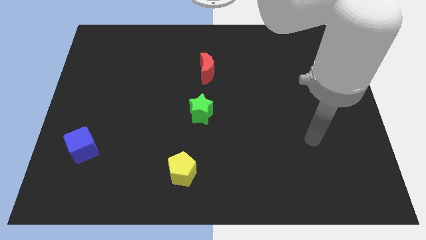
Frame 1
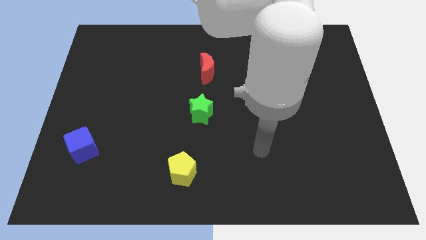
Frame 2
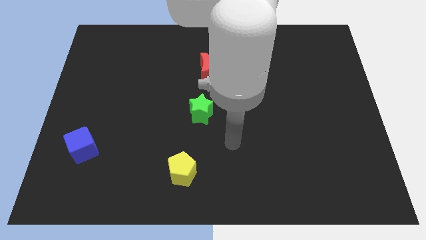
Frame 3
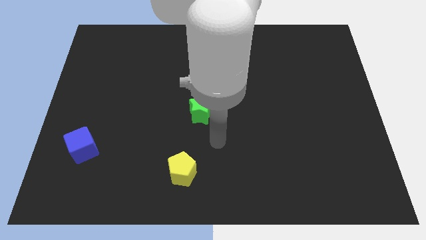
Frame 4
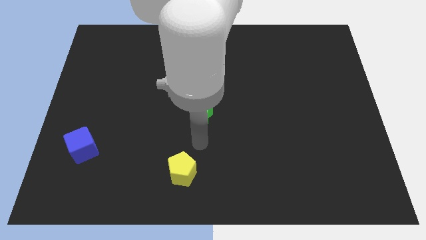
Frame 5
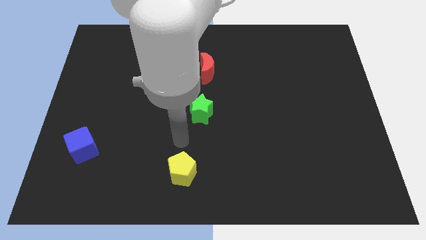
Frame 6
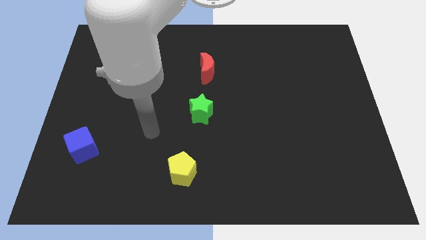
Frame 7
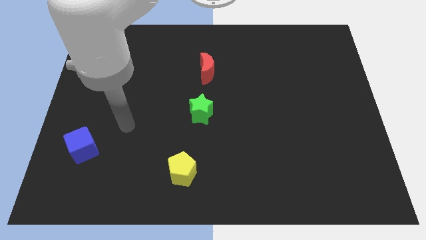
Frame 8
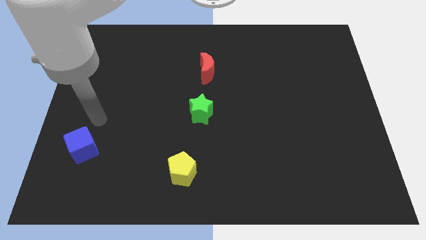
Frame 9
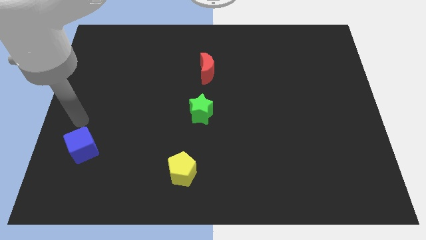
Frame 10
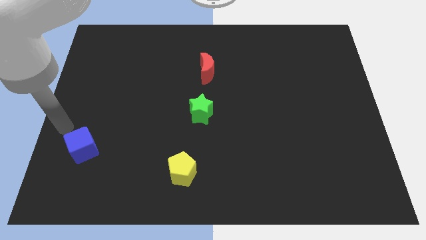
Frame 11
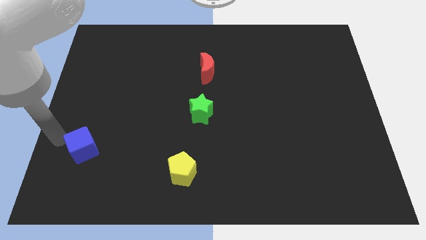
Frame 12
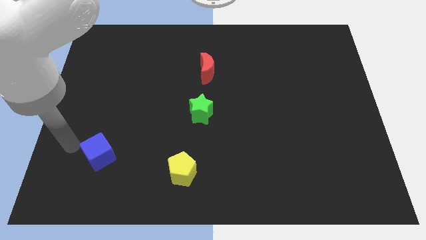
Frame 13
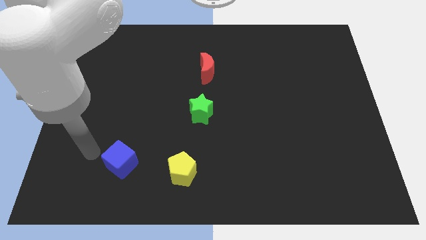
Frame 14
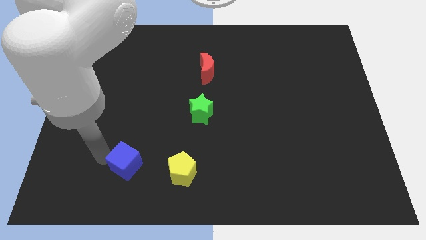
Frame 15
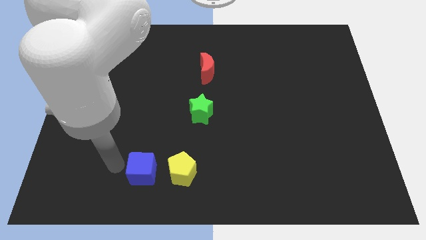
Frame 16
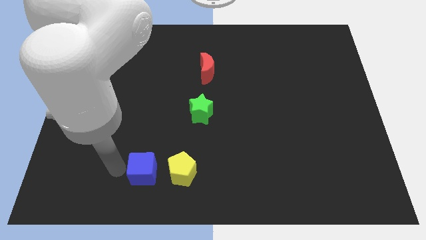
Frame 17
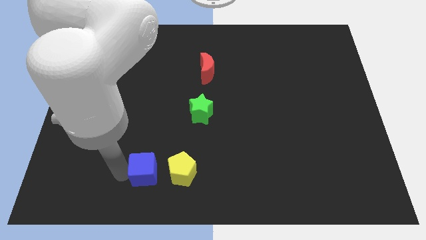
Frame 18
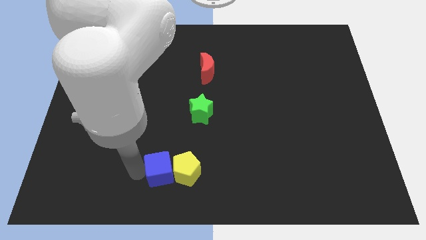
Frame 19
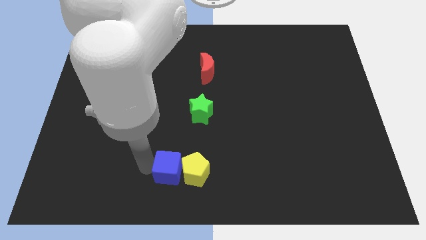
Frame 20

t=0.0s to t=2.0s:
slide the blue cube towards the pentagon

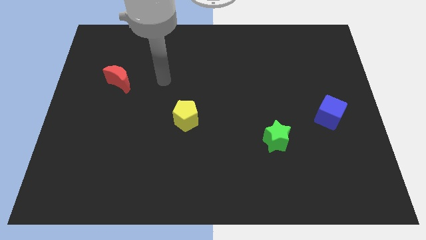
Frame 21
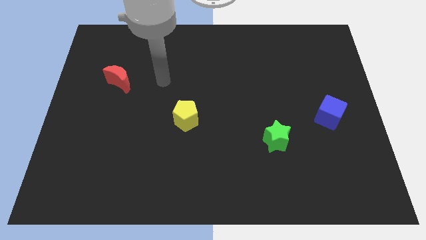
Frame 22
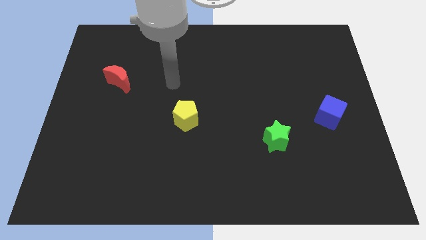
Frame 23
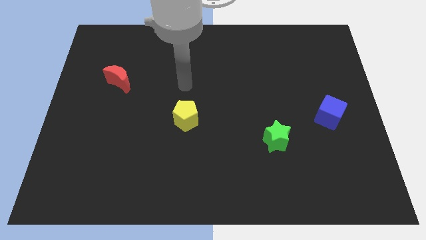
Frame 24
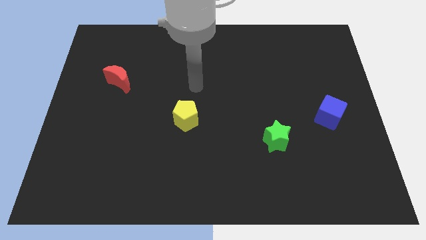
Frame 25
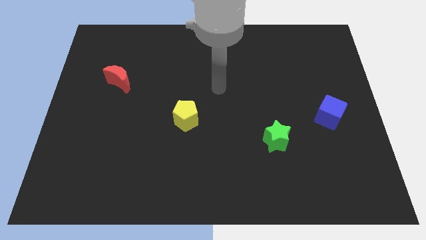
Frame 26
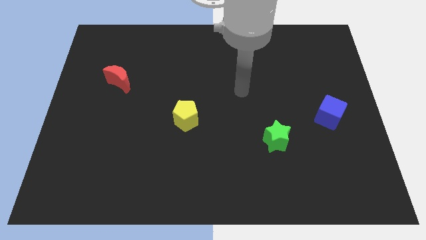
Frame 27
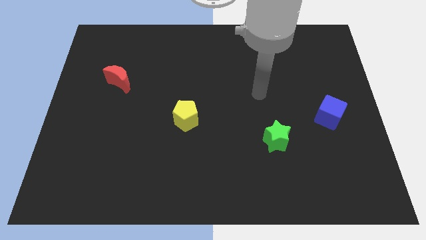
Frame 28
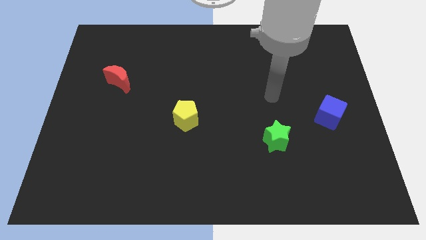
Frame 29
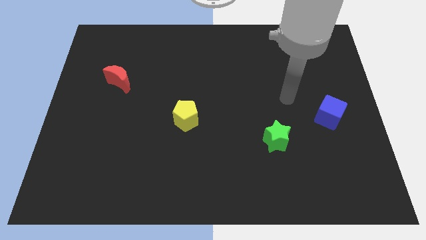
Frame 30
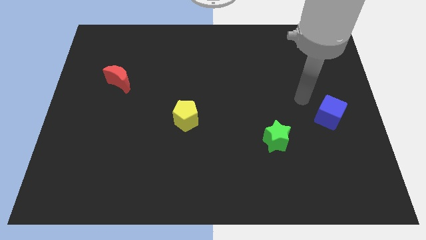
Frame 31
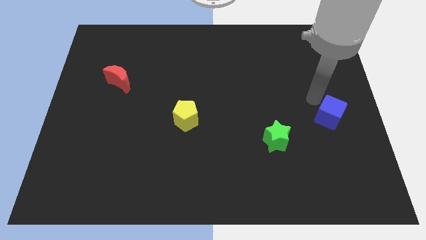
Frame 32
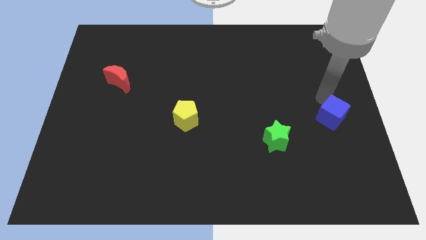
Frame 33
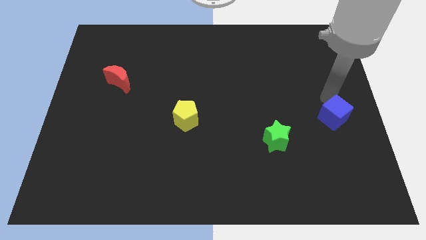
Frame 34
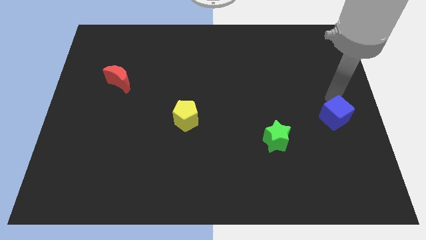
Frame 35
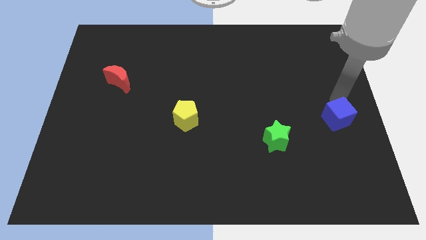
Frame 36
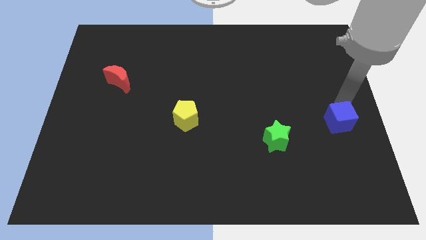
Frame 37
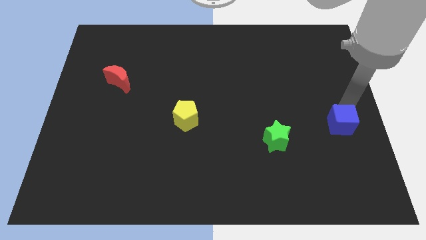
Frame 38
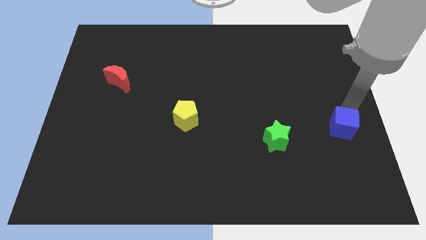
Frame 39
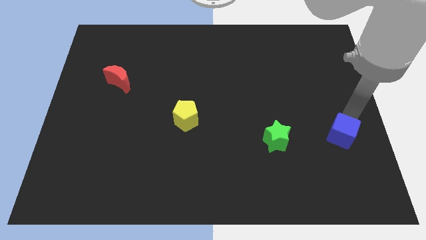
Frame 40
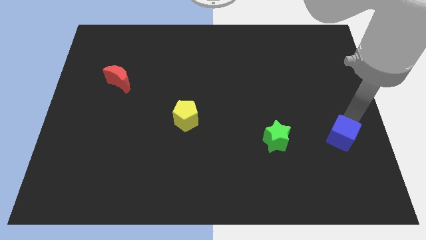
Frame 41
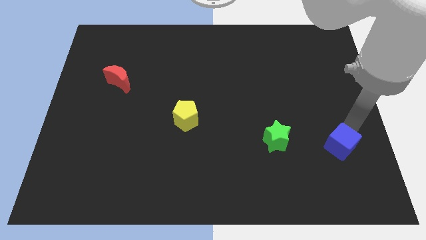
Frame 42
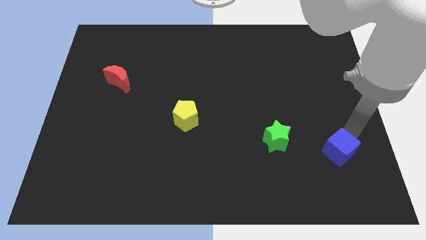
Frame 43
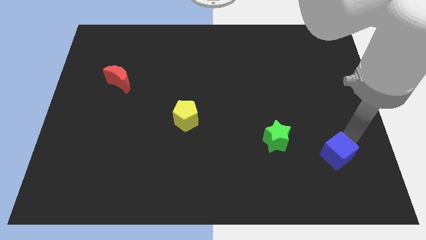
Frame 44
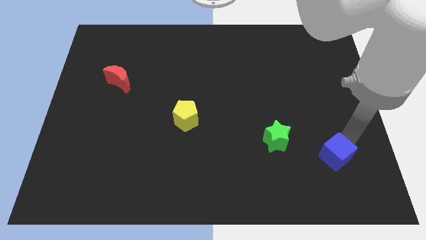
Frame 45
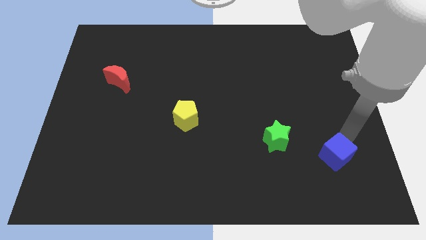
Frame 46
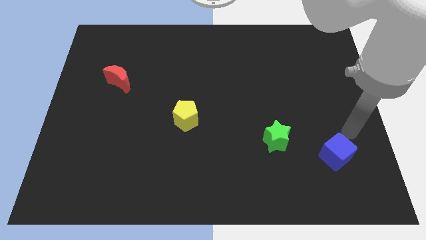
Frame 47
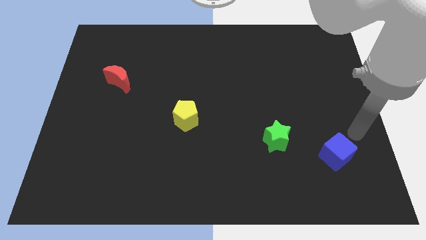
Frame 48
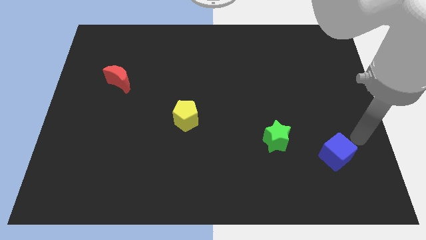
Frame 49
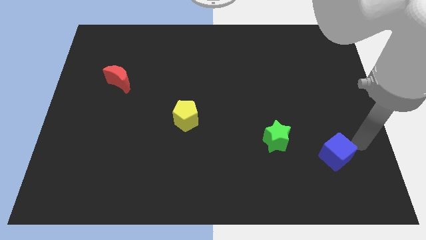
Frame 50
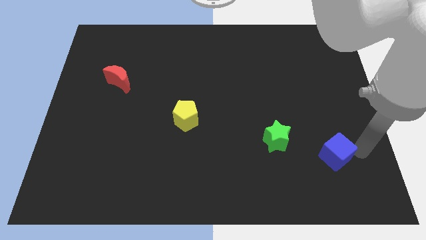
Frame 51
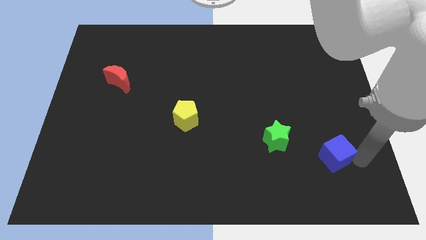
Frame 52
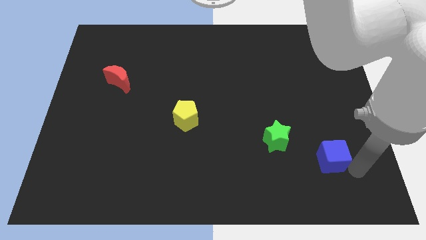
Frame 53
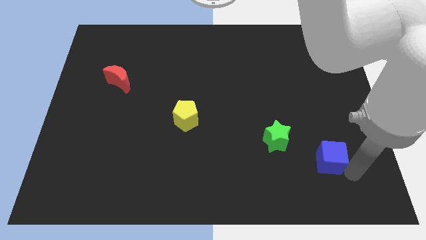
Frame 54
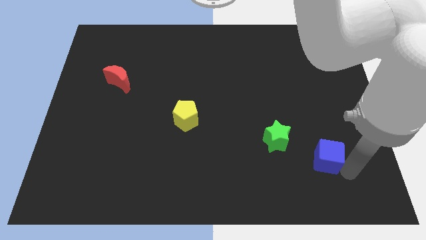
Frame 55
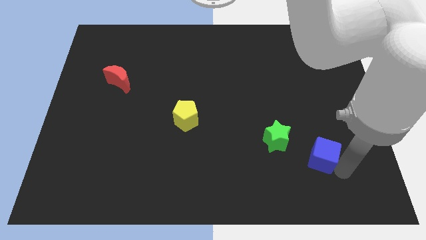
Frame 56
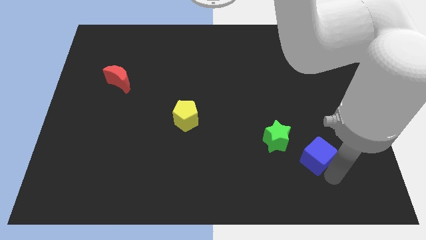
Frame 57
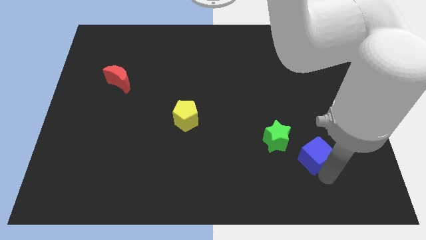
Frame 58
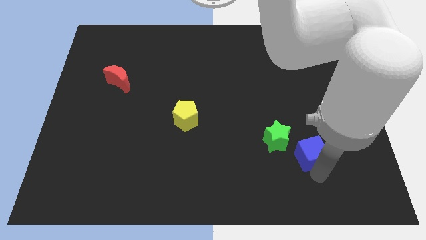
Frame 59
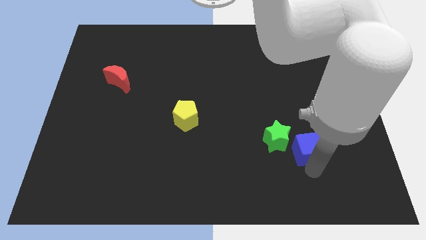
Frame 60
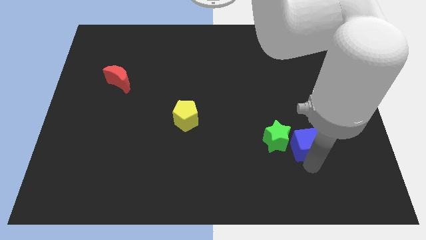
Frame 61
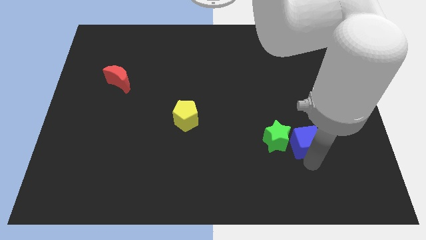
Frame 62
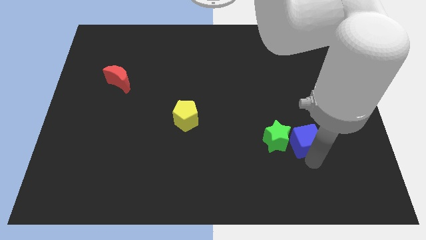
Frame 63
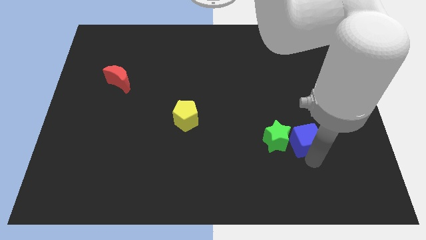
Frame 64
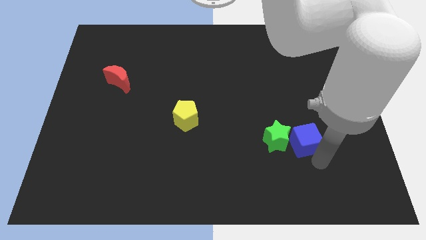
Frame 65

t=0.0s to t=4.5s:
push the blue block towards the green star

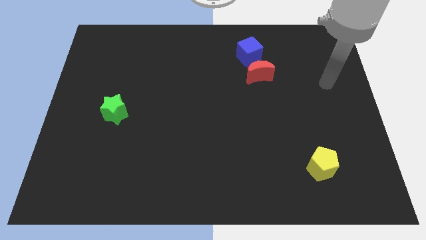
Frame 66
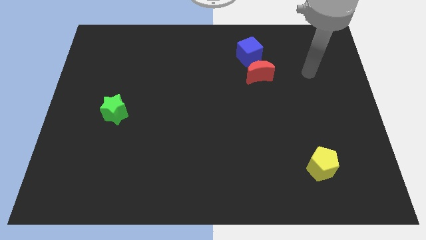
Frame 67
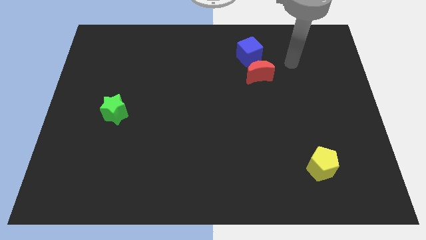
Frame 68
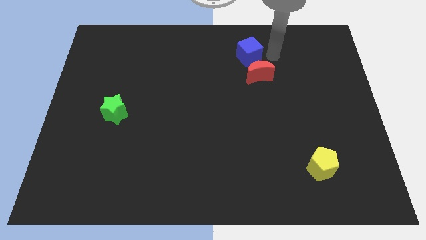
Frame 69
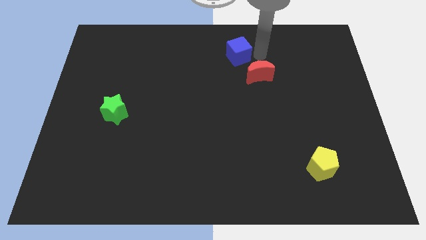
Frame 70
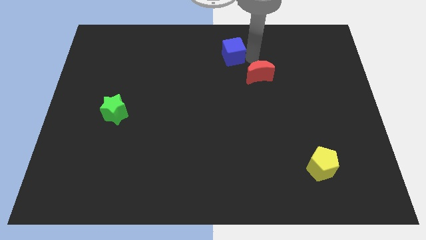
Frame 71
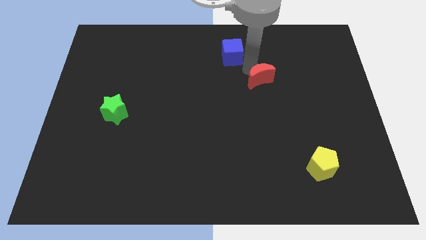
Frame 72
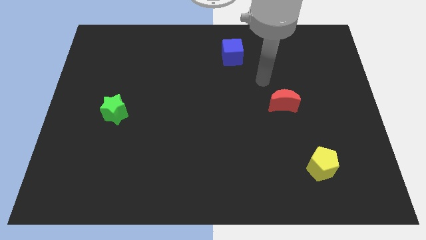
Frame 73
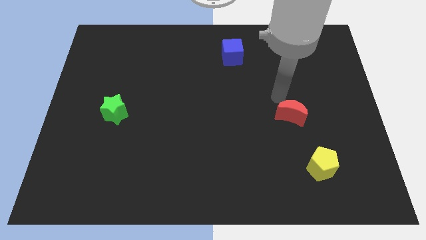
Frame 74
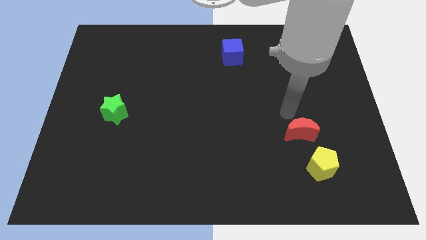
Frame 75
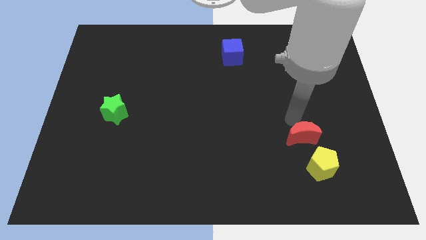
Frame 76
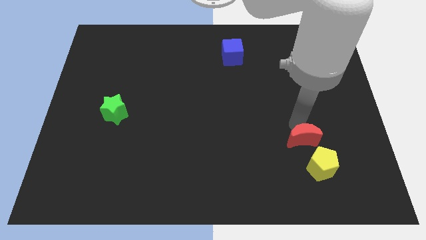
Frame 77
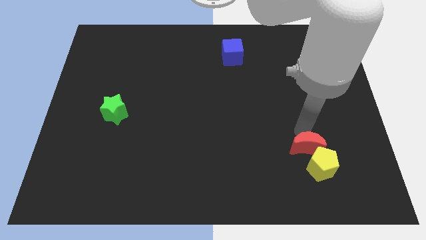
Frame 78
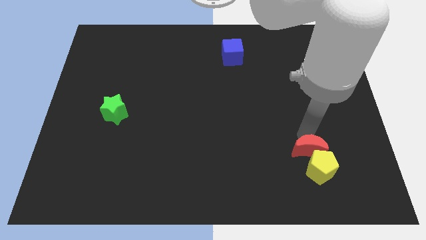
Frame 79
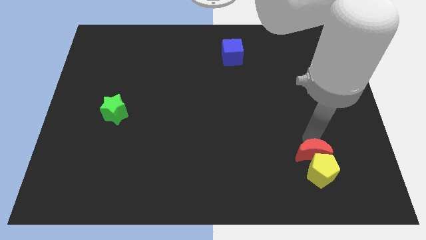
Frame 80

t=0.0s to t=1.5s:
push the moon close to the pentagon

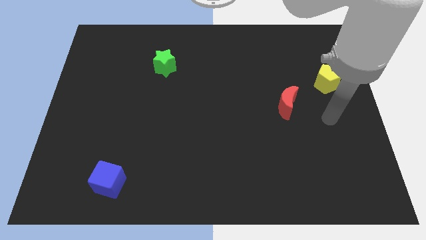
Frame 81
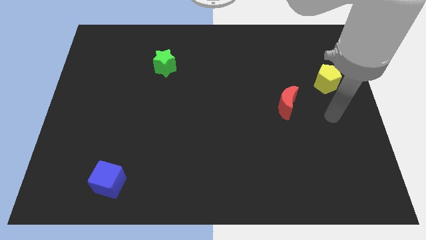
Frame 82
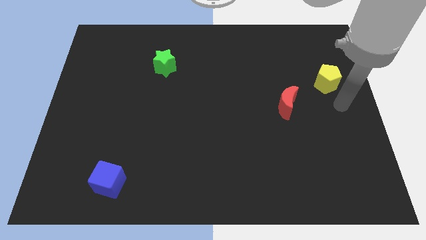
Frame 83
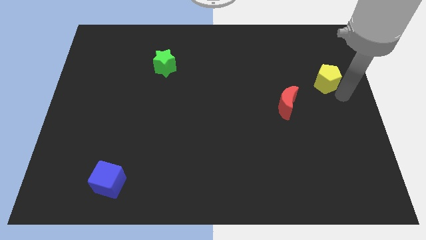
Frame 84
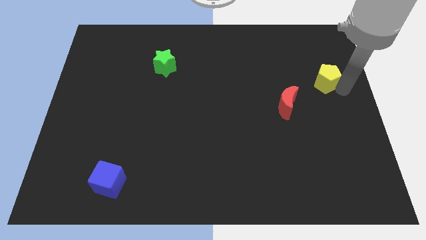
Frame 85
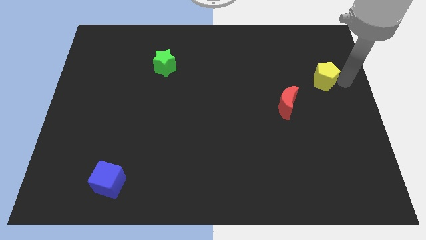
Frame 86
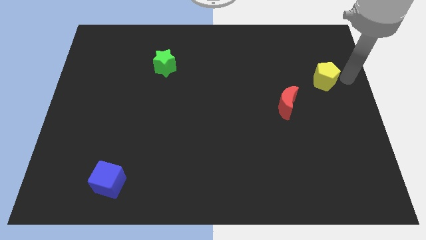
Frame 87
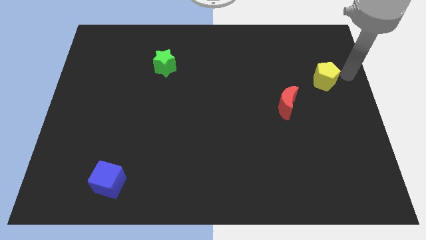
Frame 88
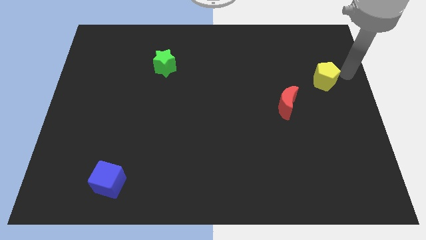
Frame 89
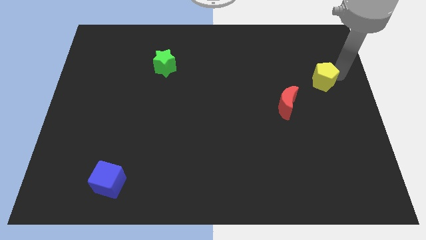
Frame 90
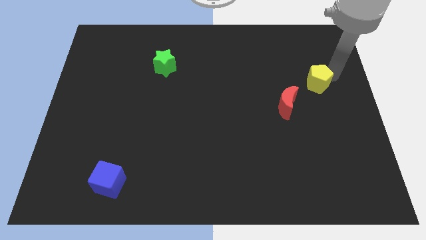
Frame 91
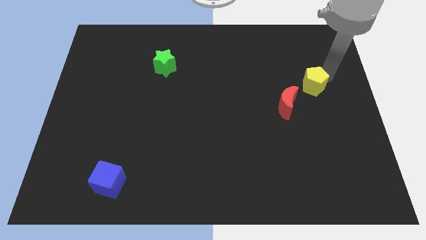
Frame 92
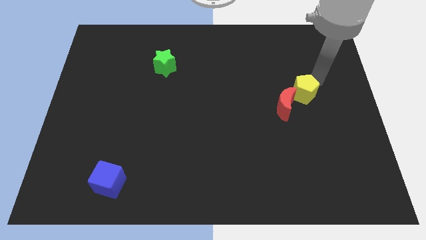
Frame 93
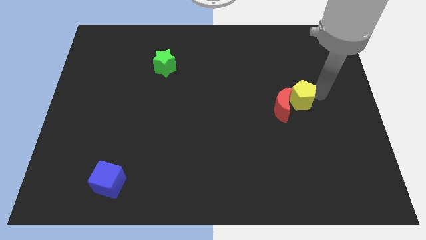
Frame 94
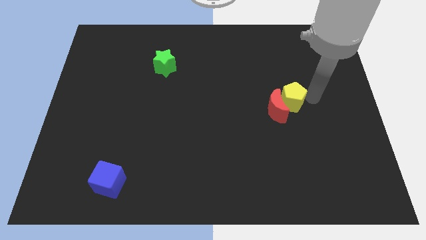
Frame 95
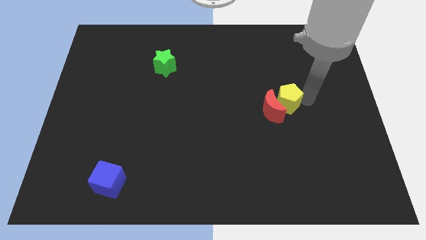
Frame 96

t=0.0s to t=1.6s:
push the yellow block towards the moon
